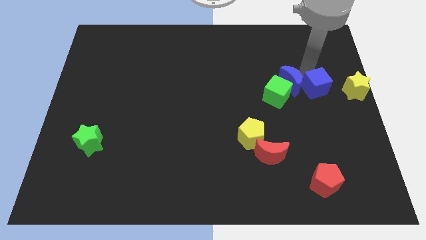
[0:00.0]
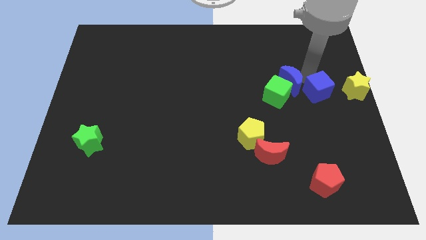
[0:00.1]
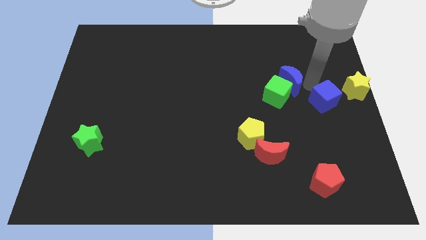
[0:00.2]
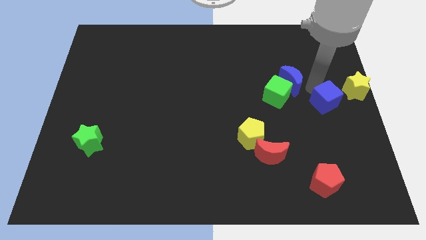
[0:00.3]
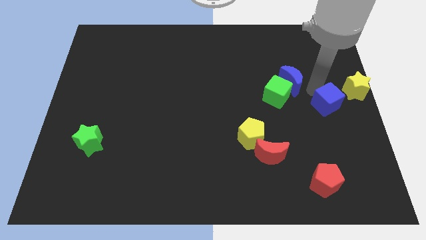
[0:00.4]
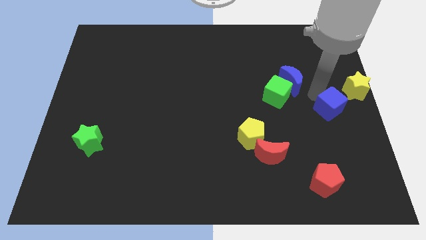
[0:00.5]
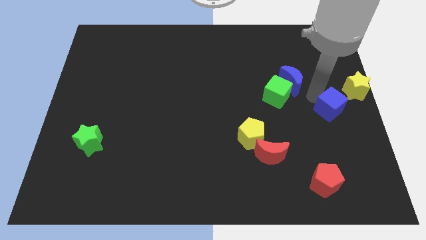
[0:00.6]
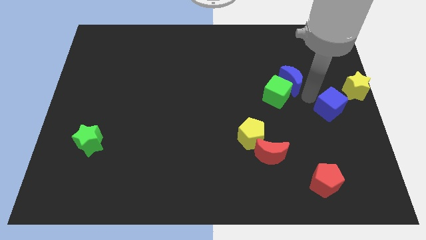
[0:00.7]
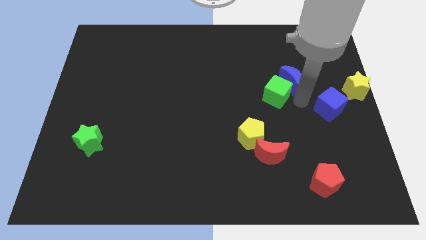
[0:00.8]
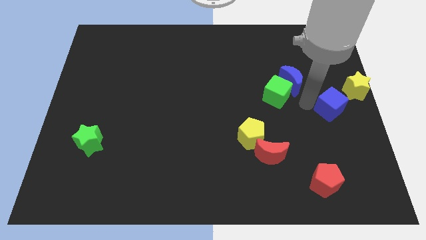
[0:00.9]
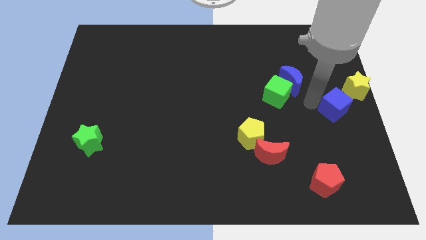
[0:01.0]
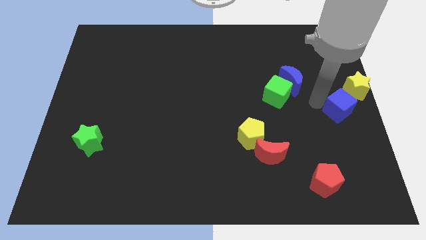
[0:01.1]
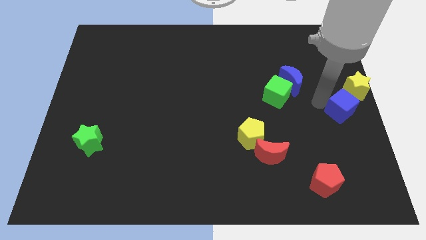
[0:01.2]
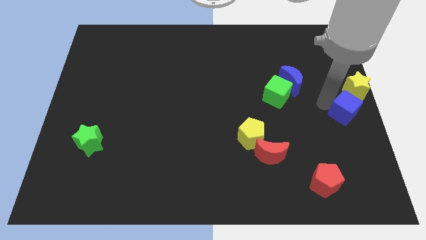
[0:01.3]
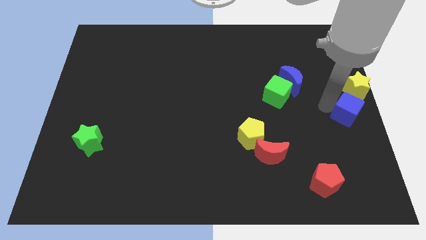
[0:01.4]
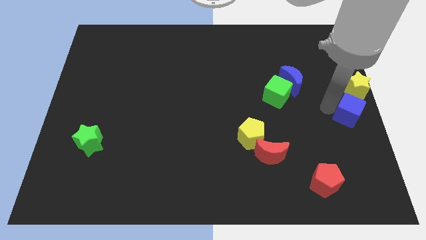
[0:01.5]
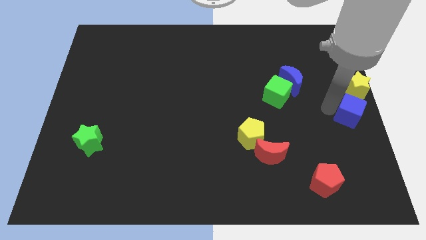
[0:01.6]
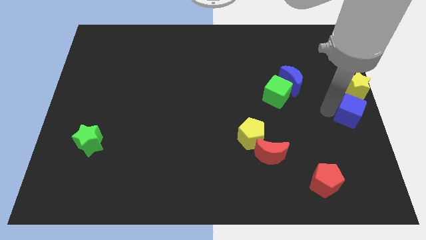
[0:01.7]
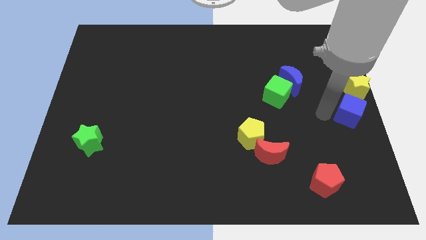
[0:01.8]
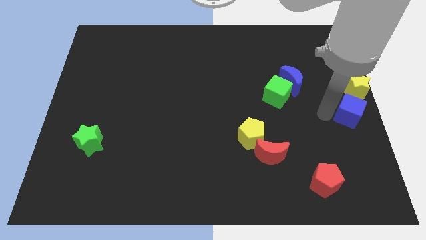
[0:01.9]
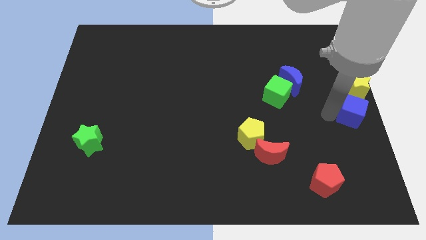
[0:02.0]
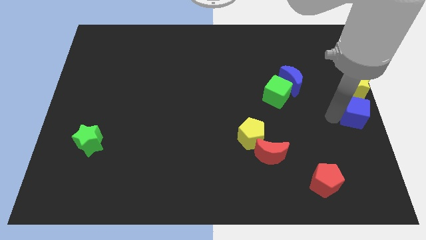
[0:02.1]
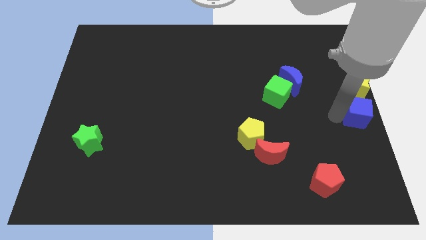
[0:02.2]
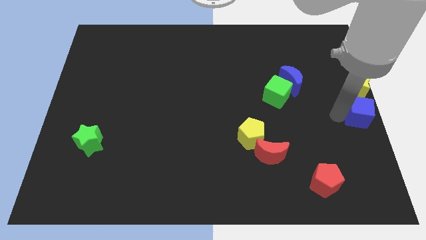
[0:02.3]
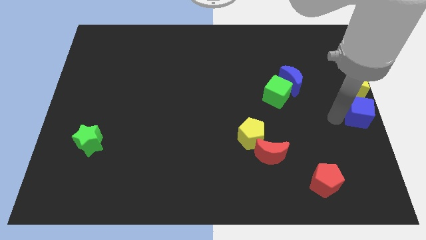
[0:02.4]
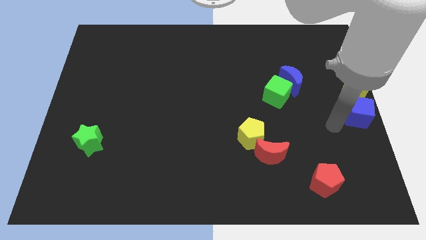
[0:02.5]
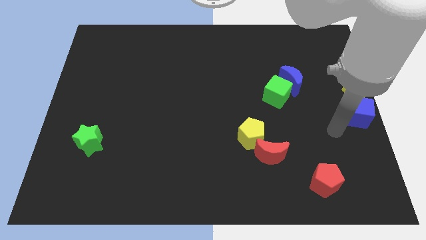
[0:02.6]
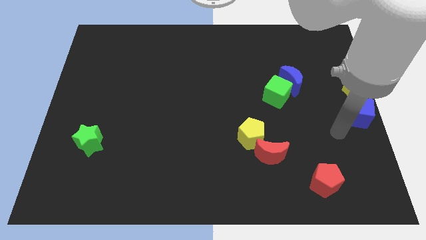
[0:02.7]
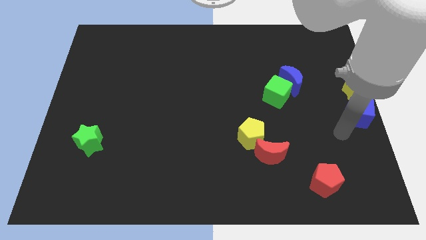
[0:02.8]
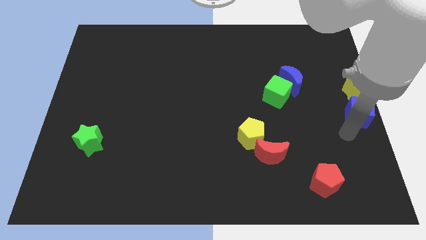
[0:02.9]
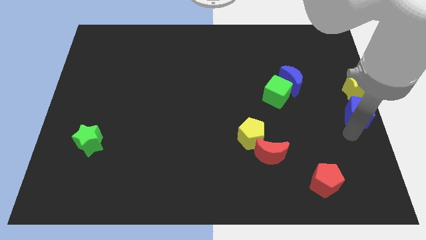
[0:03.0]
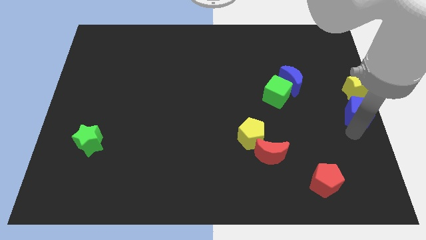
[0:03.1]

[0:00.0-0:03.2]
place blue cube below the yellow star

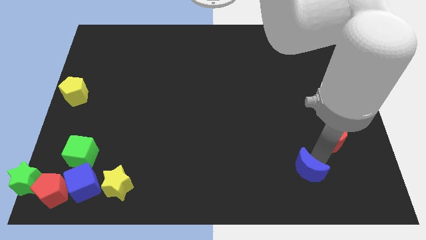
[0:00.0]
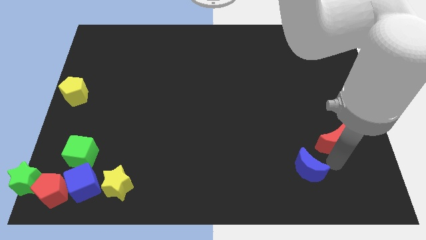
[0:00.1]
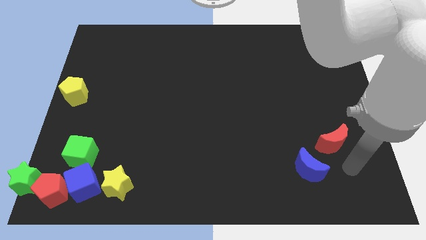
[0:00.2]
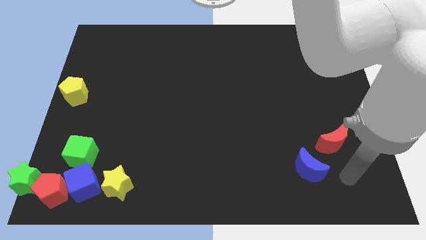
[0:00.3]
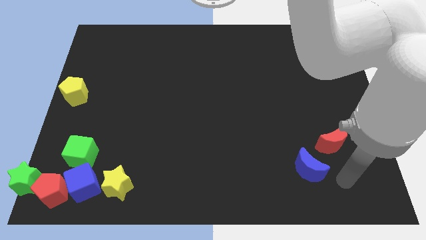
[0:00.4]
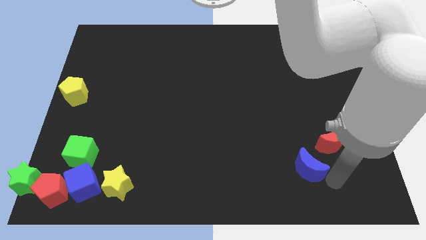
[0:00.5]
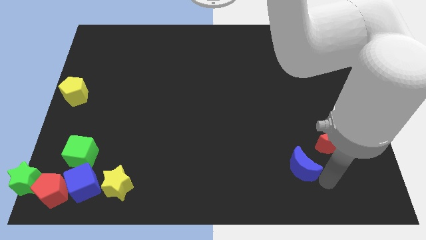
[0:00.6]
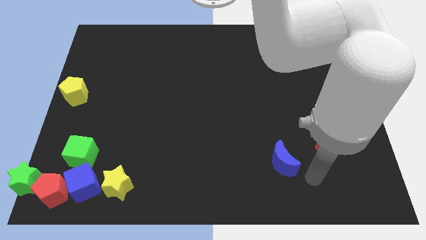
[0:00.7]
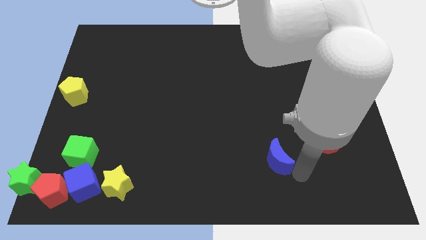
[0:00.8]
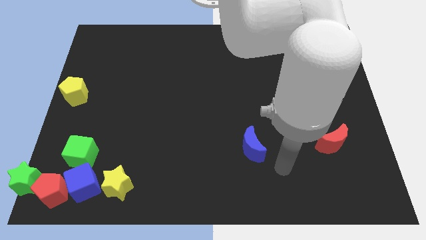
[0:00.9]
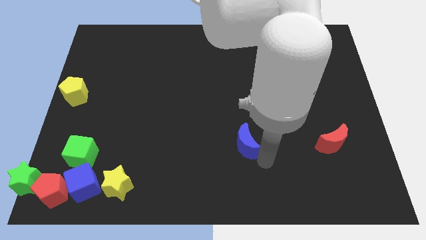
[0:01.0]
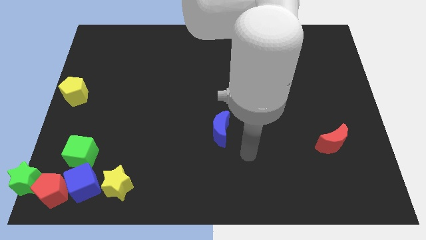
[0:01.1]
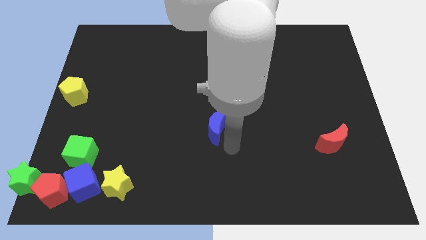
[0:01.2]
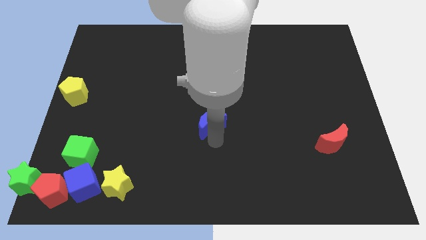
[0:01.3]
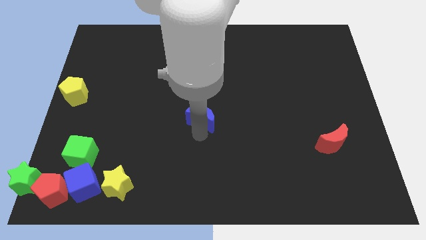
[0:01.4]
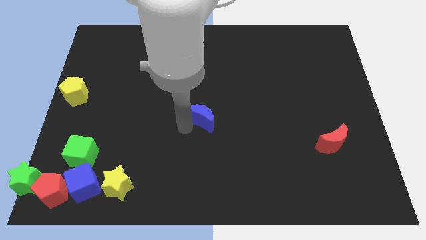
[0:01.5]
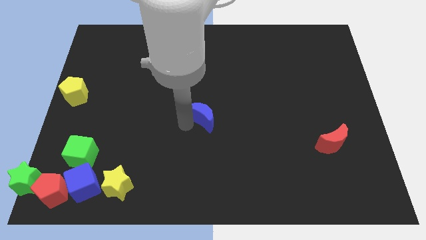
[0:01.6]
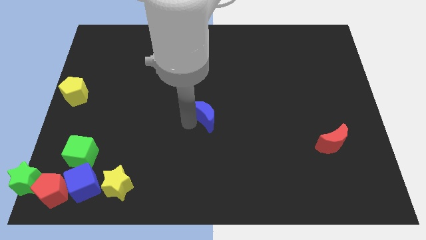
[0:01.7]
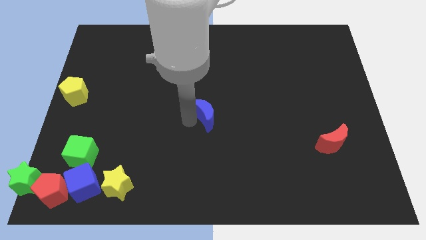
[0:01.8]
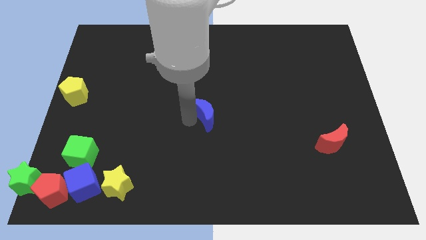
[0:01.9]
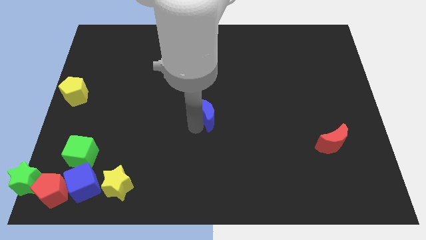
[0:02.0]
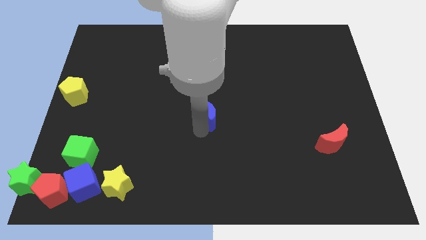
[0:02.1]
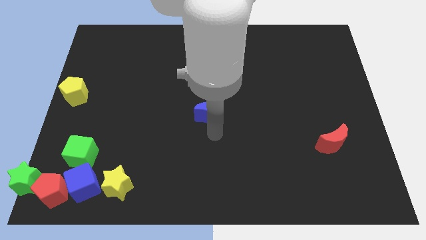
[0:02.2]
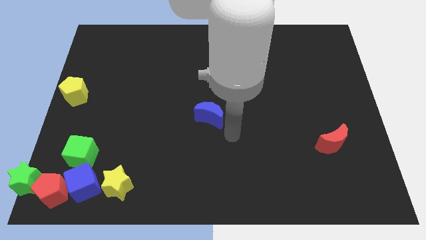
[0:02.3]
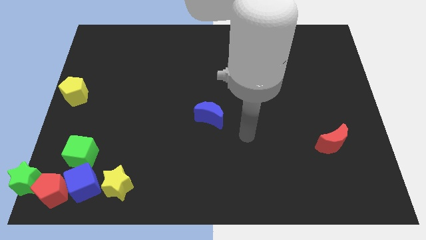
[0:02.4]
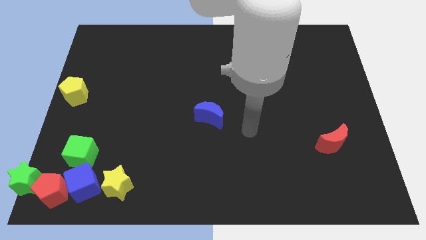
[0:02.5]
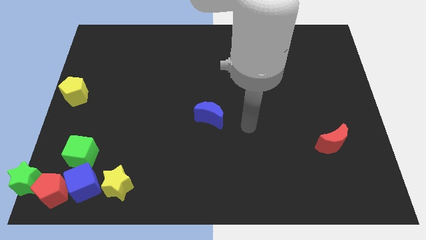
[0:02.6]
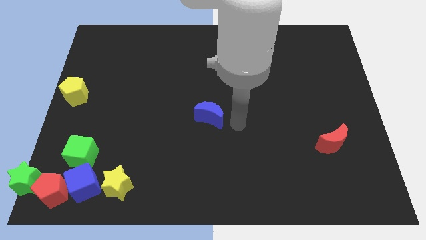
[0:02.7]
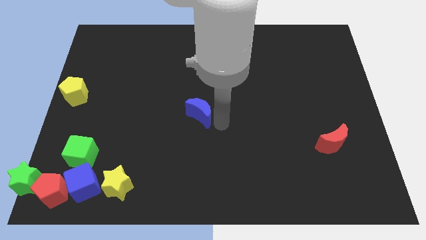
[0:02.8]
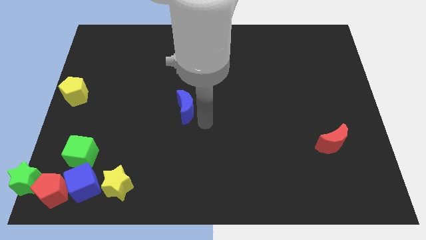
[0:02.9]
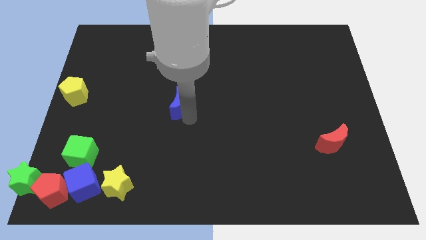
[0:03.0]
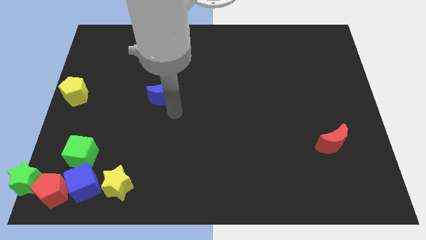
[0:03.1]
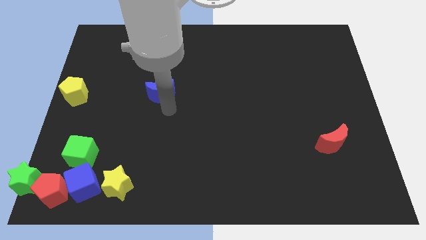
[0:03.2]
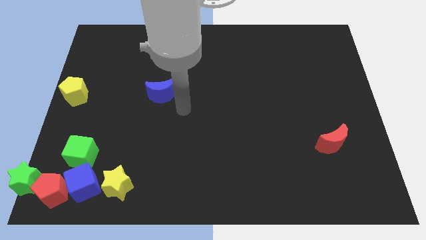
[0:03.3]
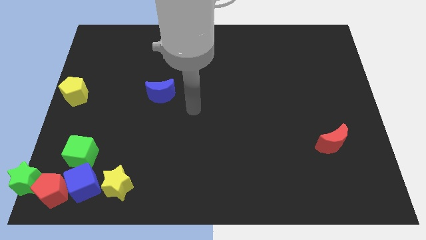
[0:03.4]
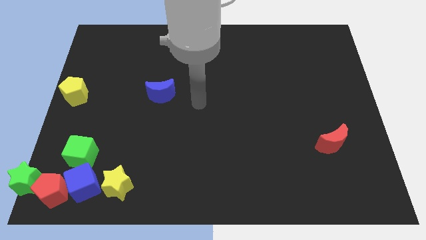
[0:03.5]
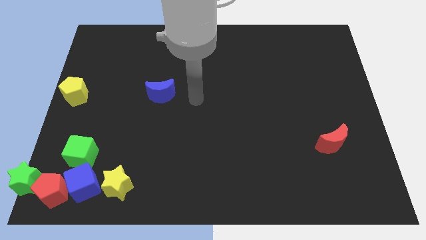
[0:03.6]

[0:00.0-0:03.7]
place the blue crescent parallel to the yellow pentagon

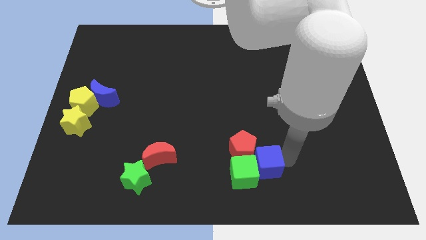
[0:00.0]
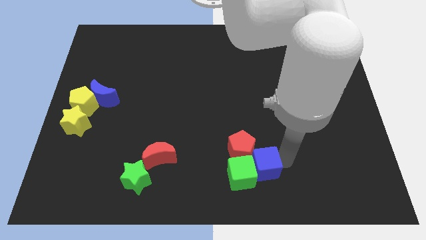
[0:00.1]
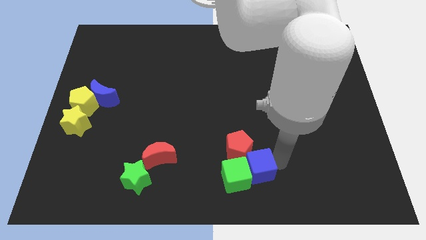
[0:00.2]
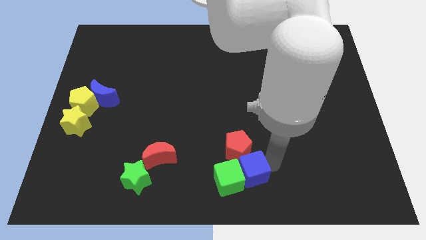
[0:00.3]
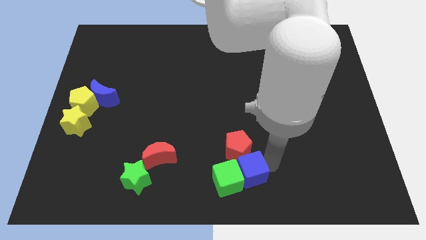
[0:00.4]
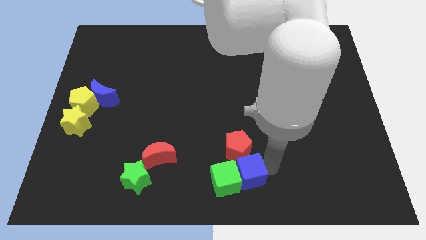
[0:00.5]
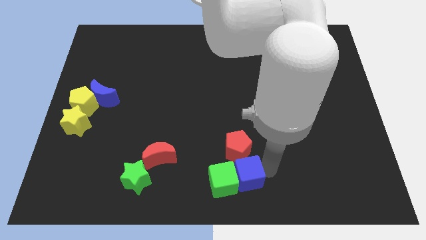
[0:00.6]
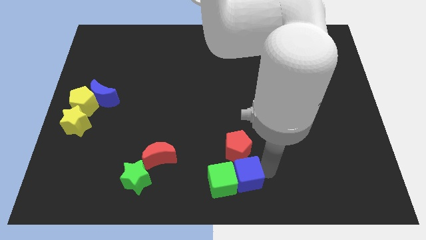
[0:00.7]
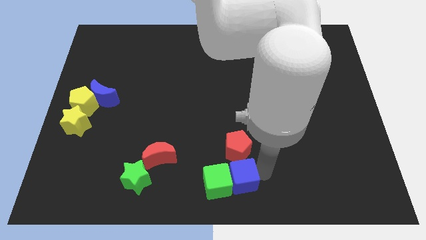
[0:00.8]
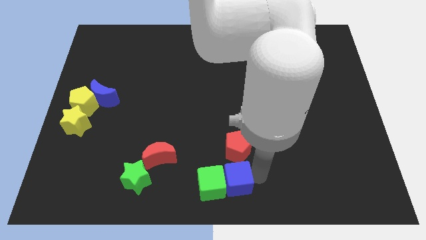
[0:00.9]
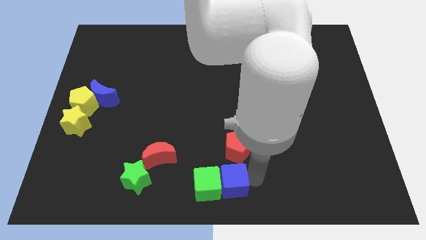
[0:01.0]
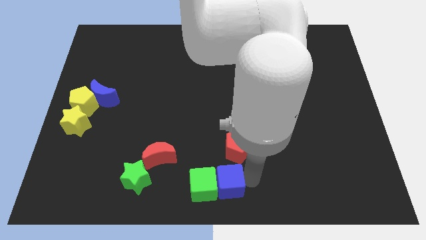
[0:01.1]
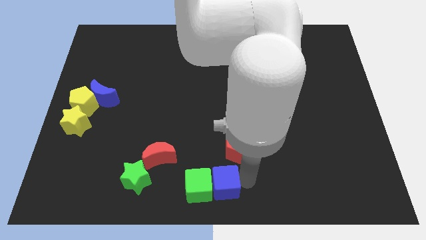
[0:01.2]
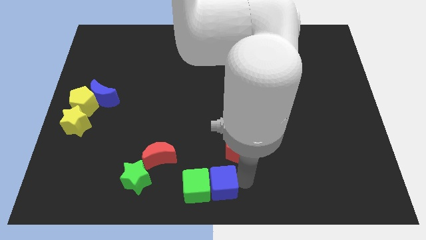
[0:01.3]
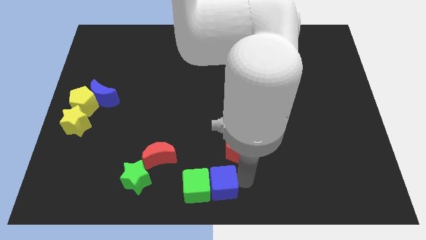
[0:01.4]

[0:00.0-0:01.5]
move the blue cube and green cube towards the green star

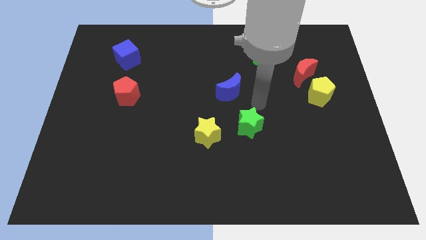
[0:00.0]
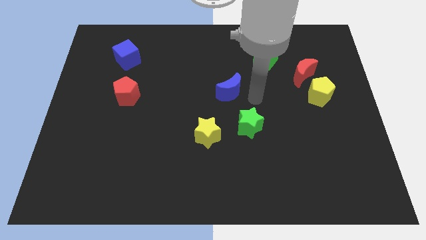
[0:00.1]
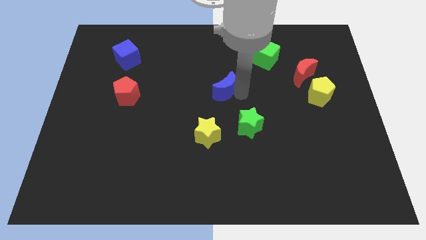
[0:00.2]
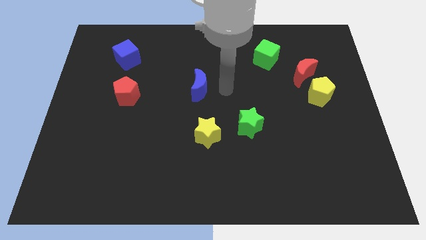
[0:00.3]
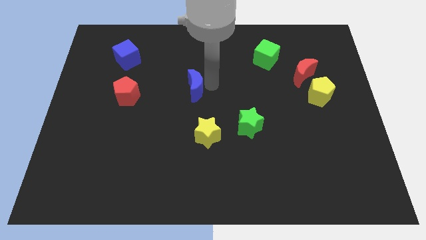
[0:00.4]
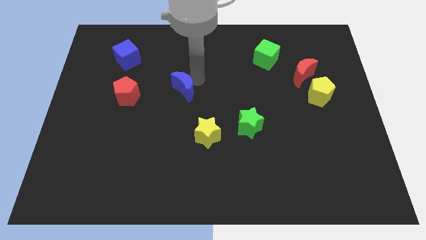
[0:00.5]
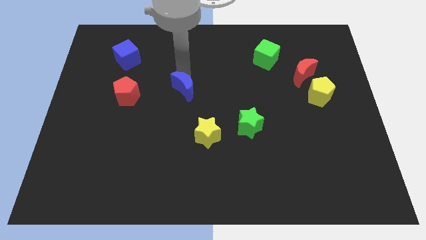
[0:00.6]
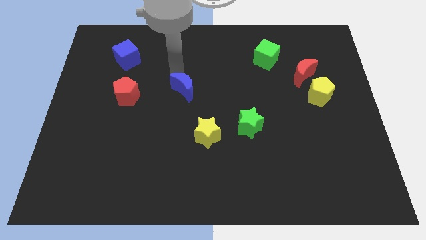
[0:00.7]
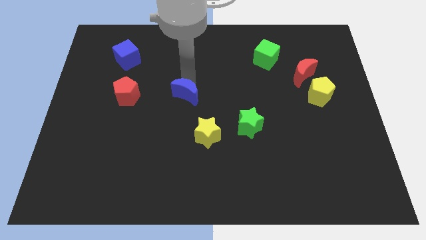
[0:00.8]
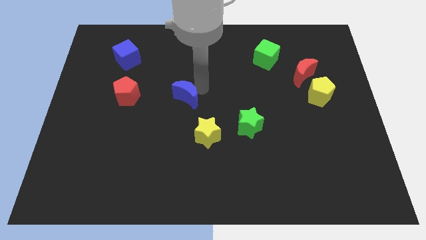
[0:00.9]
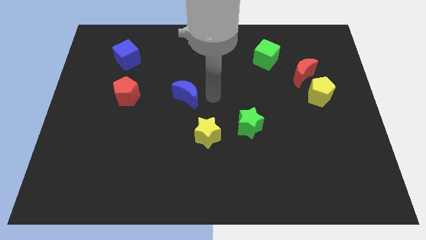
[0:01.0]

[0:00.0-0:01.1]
move the blue crescent to the right side of the red pentagon
